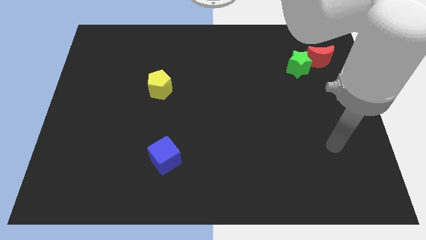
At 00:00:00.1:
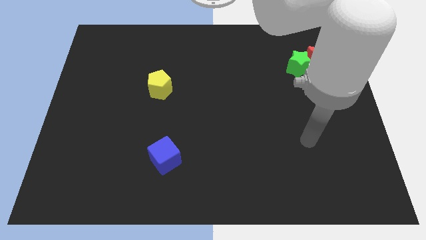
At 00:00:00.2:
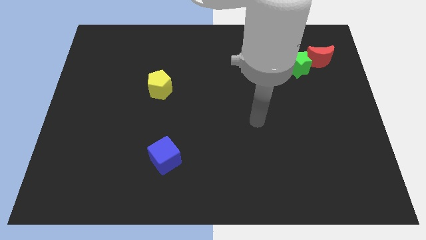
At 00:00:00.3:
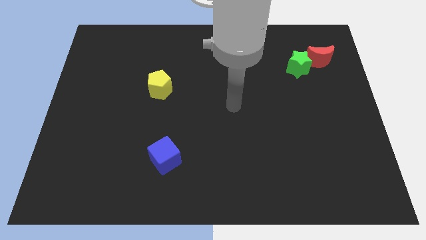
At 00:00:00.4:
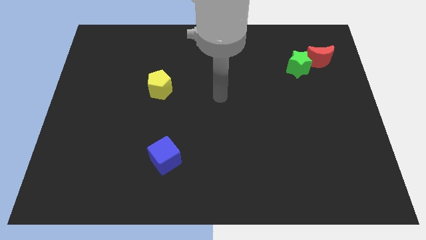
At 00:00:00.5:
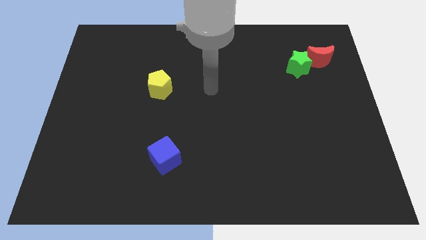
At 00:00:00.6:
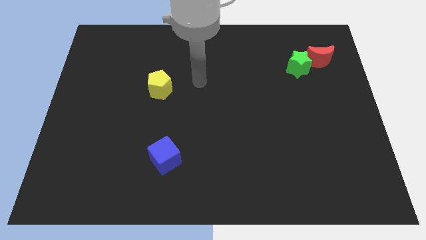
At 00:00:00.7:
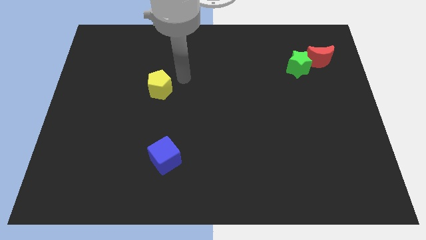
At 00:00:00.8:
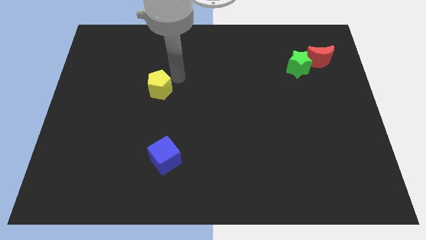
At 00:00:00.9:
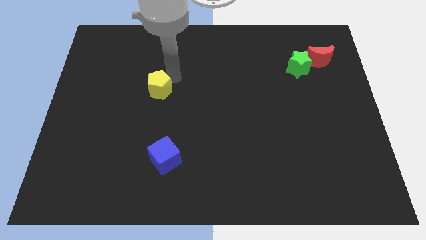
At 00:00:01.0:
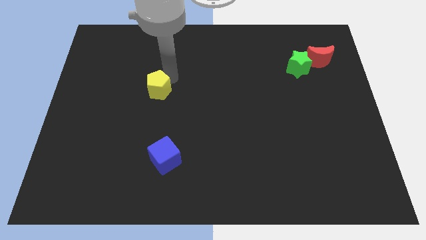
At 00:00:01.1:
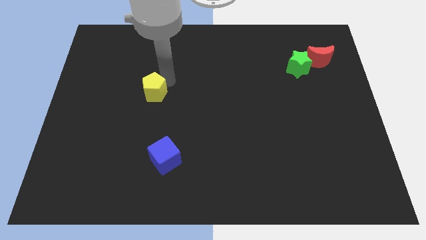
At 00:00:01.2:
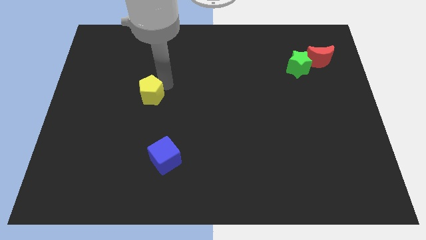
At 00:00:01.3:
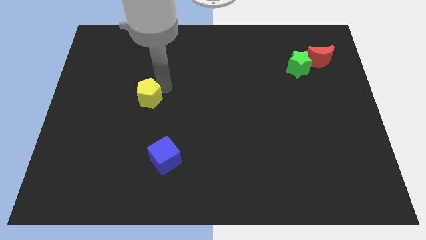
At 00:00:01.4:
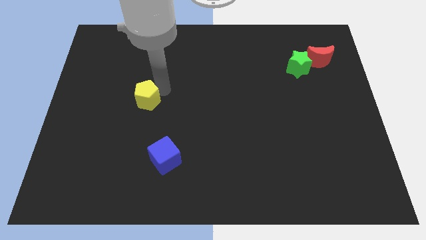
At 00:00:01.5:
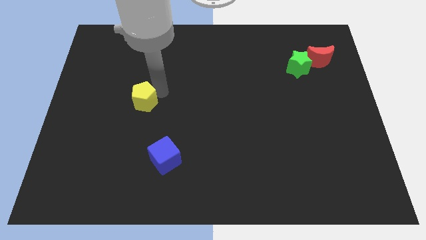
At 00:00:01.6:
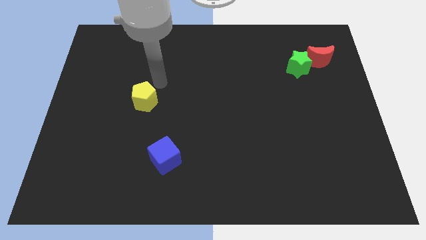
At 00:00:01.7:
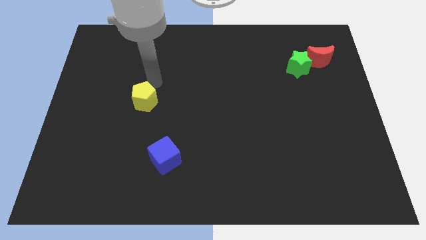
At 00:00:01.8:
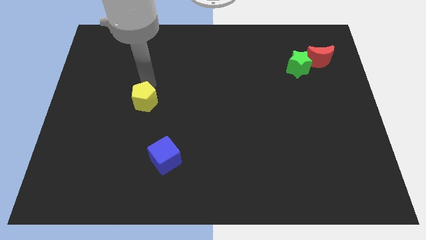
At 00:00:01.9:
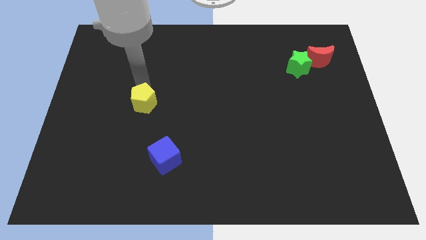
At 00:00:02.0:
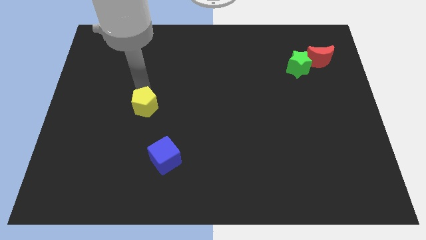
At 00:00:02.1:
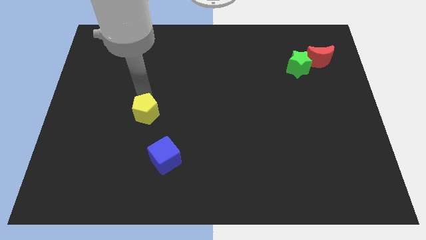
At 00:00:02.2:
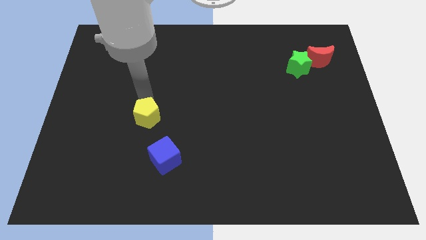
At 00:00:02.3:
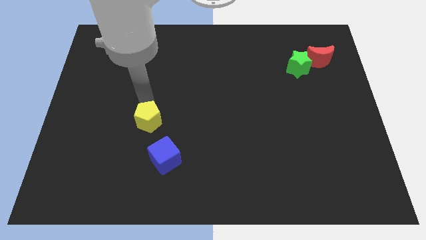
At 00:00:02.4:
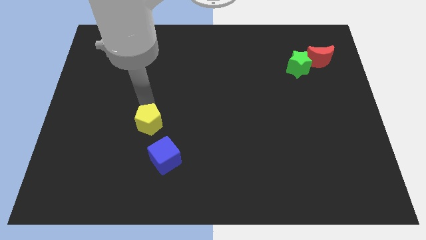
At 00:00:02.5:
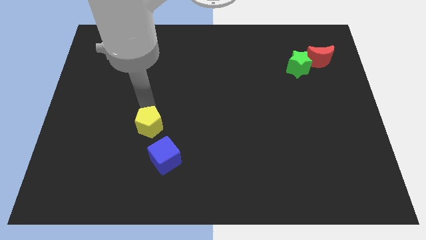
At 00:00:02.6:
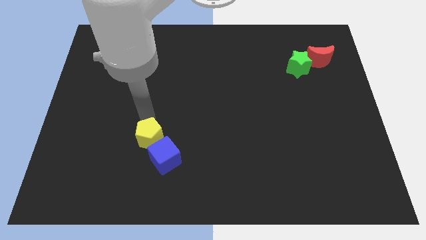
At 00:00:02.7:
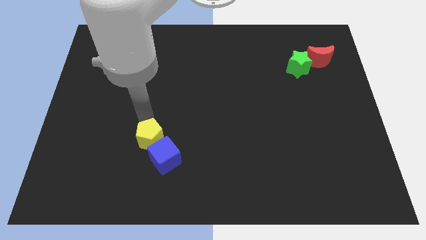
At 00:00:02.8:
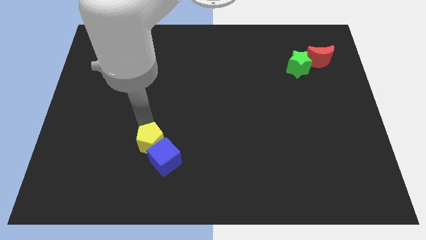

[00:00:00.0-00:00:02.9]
put the pentagon close to the cube

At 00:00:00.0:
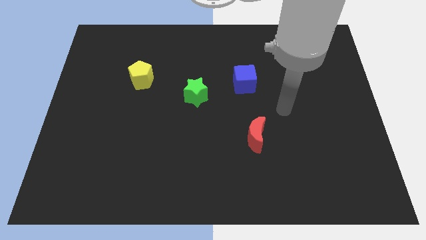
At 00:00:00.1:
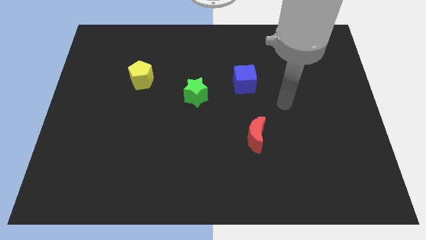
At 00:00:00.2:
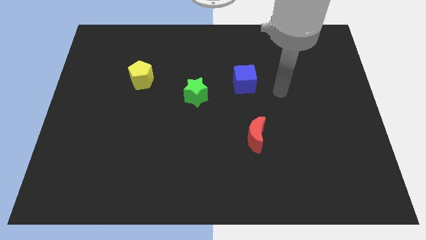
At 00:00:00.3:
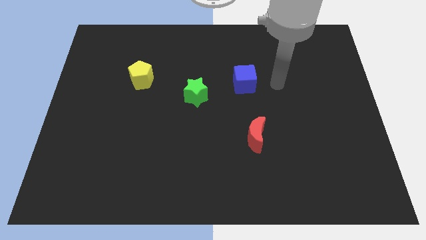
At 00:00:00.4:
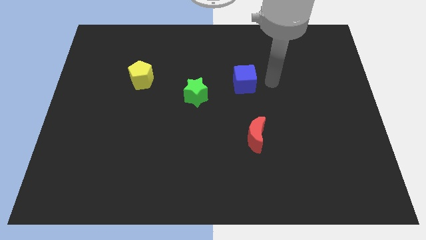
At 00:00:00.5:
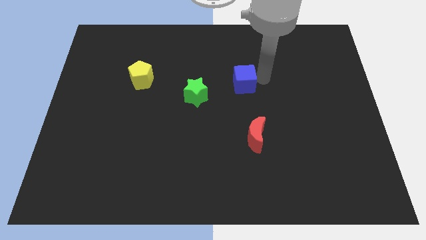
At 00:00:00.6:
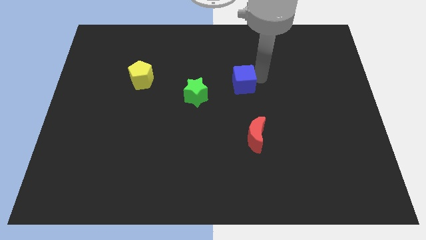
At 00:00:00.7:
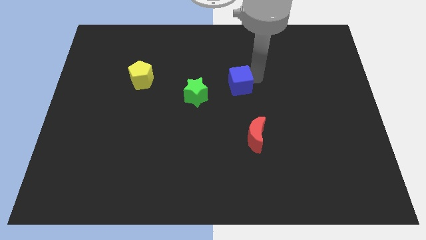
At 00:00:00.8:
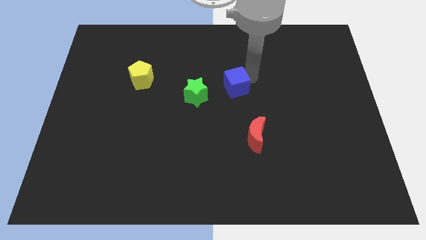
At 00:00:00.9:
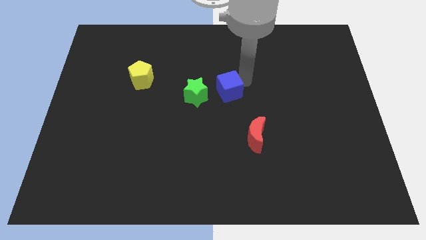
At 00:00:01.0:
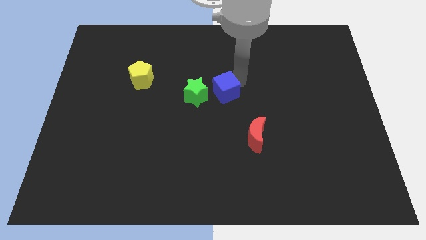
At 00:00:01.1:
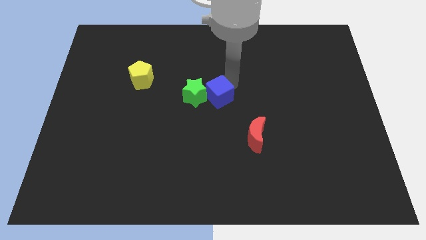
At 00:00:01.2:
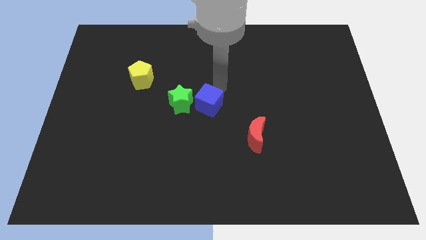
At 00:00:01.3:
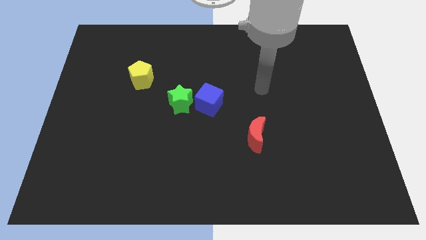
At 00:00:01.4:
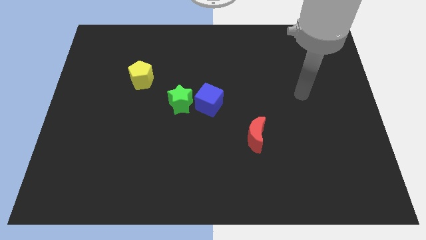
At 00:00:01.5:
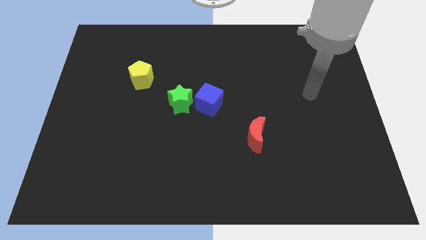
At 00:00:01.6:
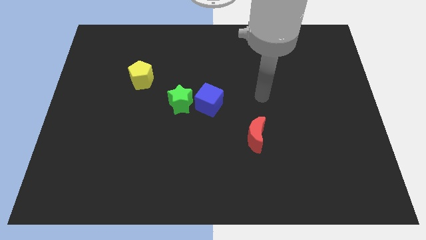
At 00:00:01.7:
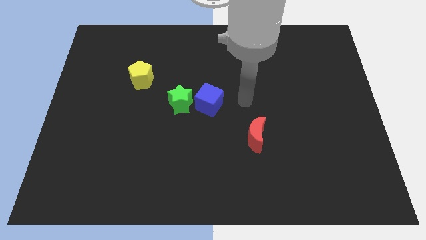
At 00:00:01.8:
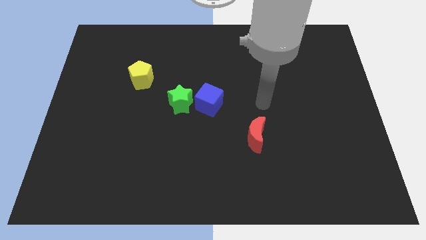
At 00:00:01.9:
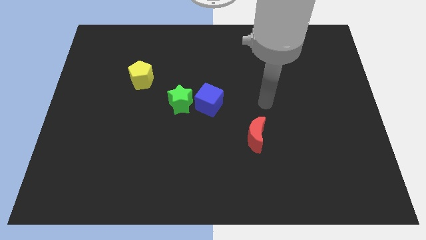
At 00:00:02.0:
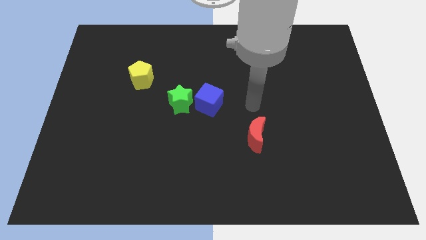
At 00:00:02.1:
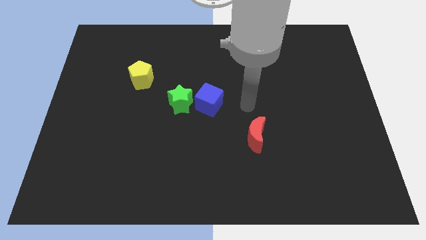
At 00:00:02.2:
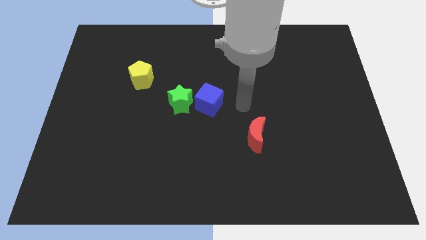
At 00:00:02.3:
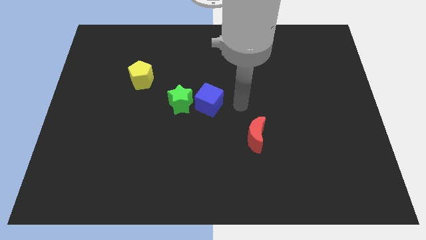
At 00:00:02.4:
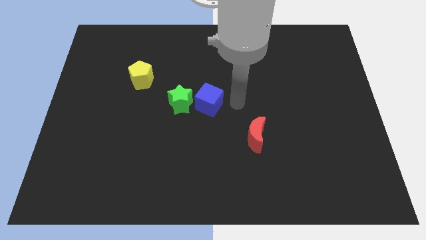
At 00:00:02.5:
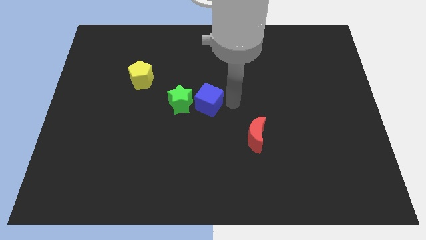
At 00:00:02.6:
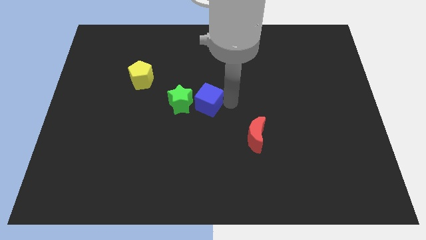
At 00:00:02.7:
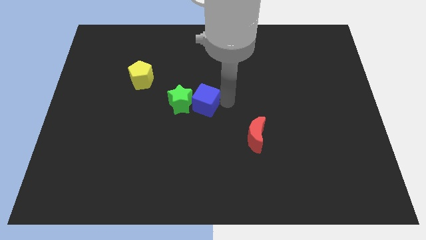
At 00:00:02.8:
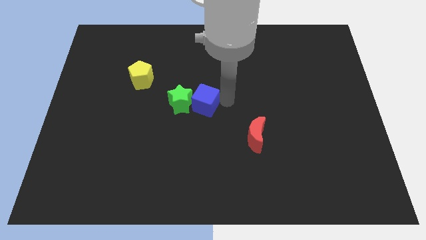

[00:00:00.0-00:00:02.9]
push the blue cube next to the green star

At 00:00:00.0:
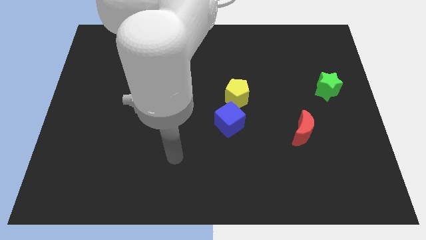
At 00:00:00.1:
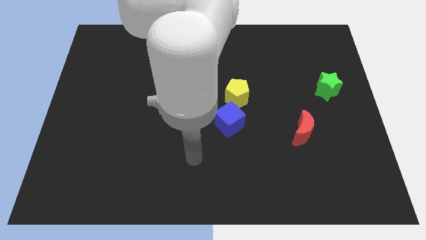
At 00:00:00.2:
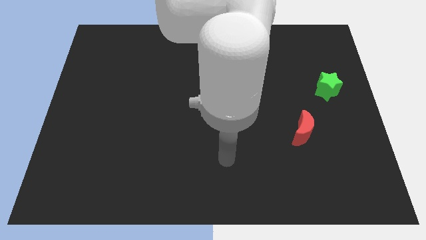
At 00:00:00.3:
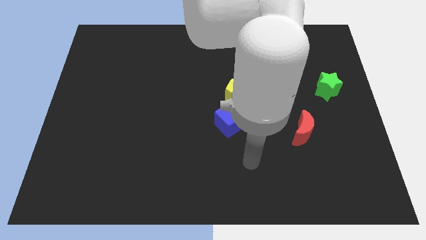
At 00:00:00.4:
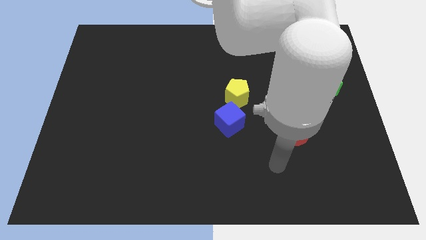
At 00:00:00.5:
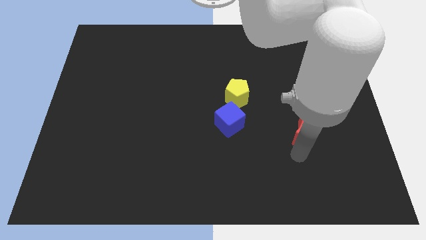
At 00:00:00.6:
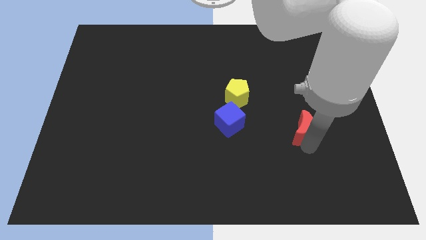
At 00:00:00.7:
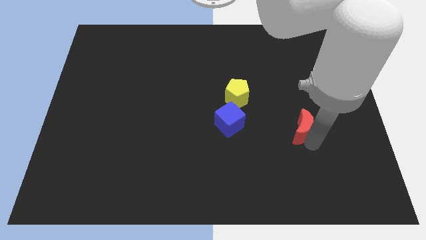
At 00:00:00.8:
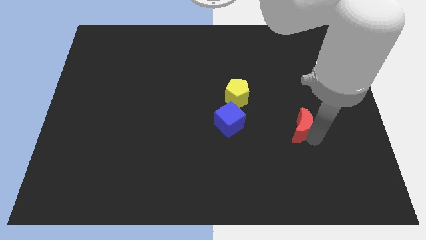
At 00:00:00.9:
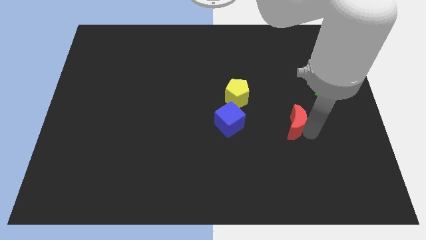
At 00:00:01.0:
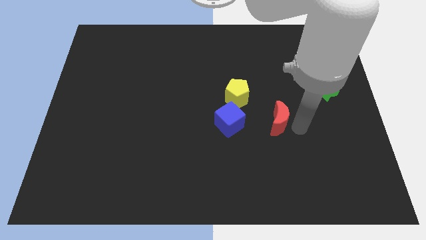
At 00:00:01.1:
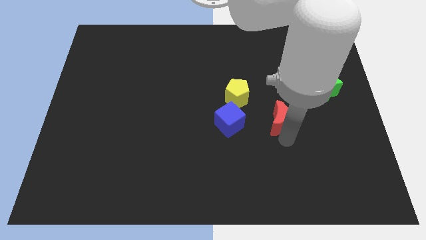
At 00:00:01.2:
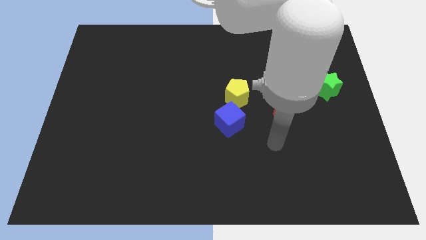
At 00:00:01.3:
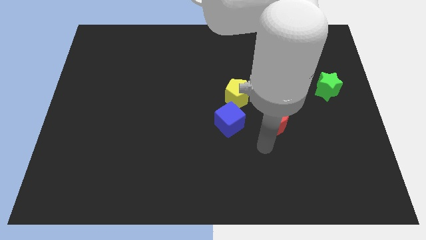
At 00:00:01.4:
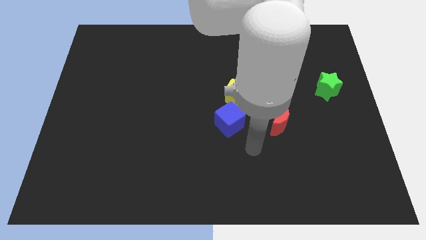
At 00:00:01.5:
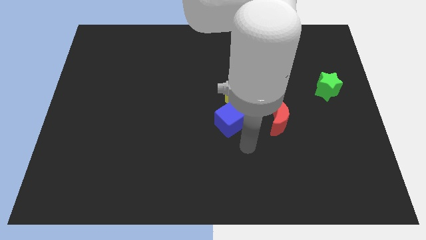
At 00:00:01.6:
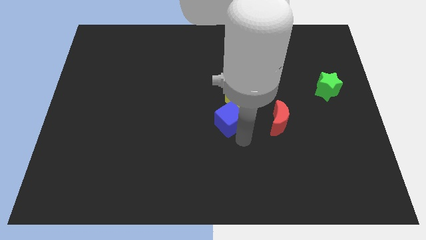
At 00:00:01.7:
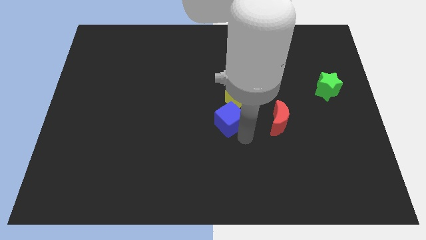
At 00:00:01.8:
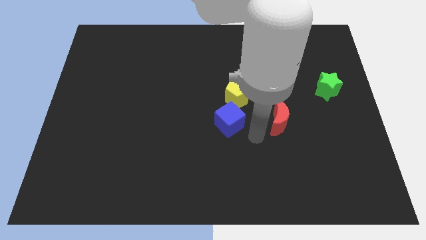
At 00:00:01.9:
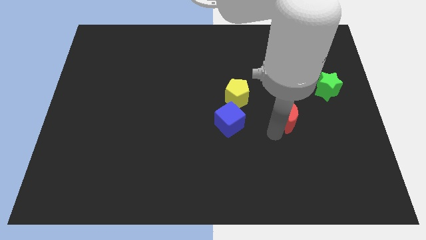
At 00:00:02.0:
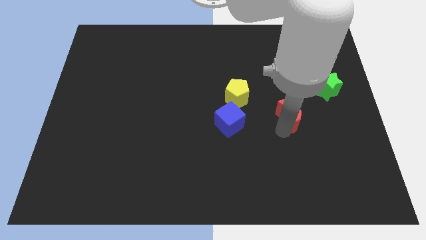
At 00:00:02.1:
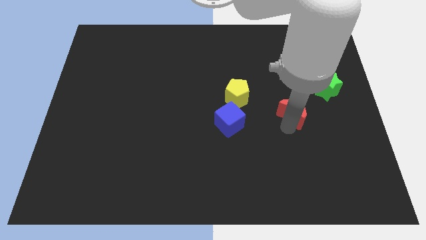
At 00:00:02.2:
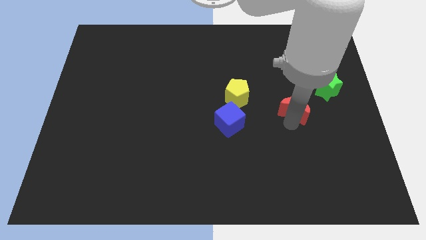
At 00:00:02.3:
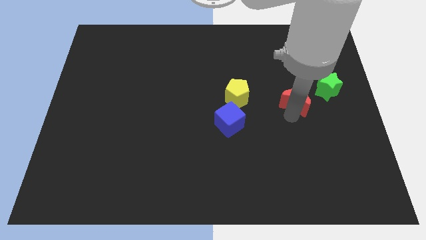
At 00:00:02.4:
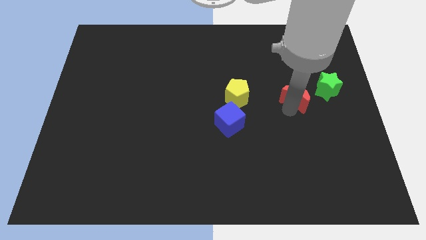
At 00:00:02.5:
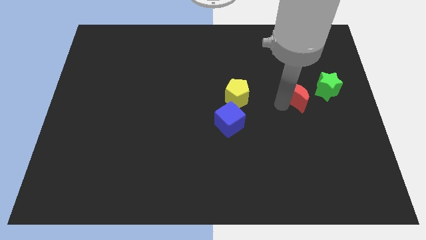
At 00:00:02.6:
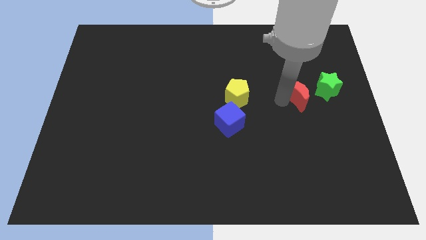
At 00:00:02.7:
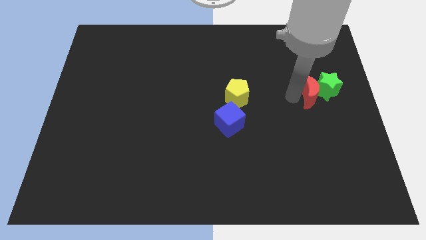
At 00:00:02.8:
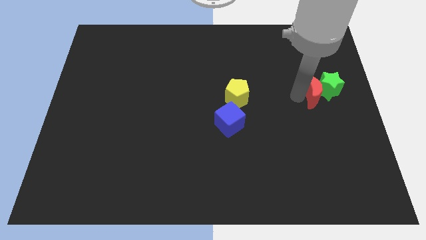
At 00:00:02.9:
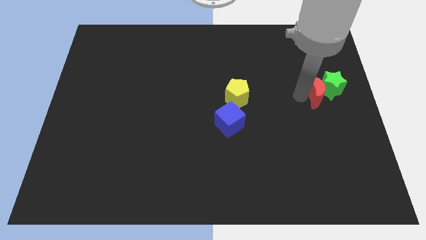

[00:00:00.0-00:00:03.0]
put the red block to the star
